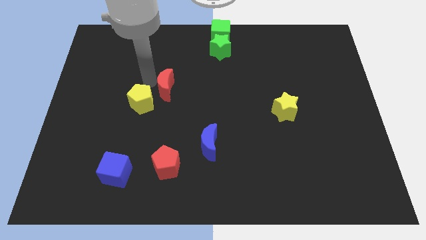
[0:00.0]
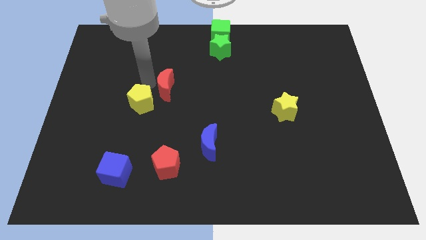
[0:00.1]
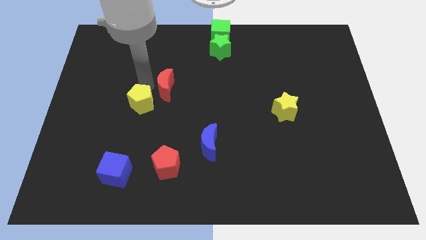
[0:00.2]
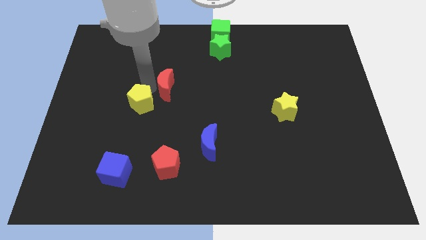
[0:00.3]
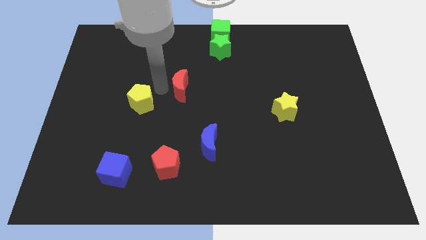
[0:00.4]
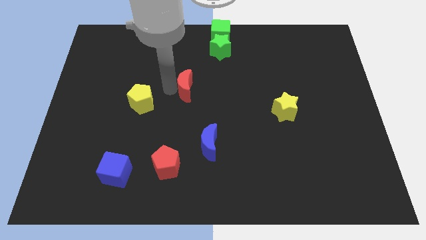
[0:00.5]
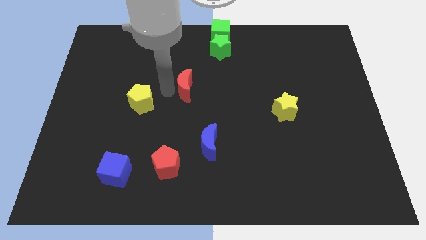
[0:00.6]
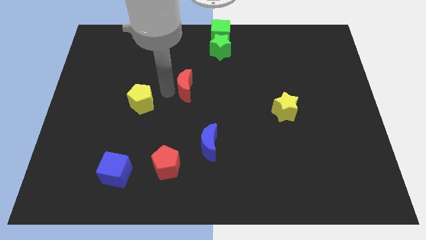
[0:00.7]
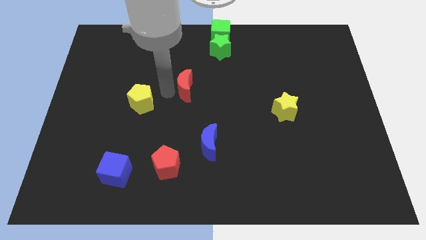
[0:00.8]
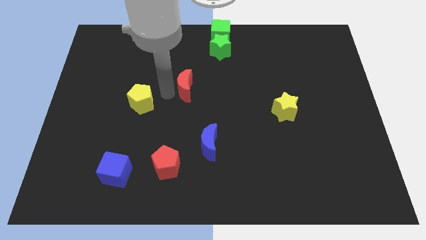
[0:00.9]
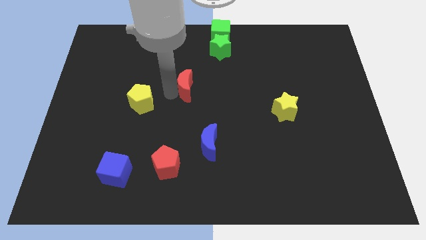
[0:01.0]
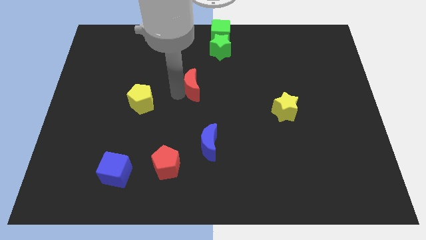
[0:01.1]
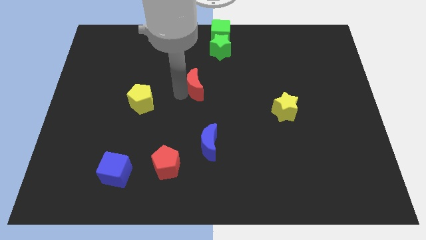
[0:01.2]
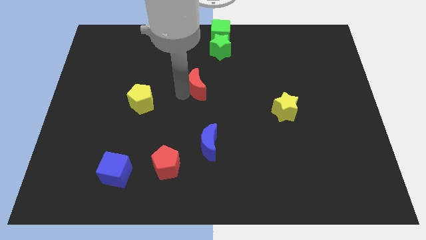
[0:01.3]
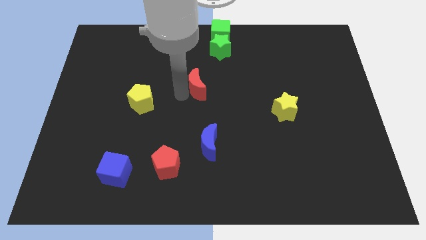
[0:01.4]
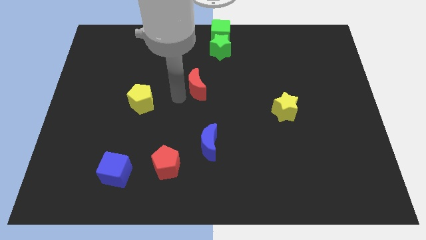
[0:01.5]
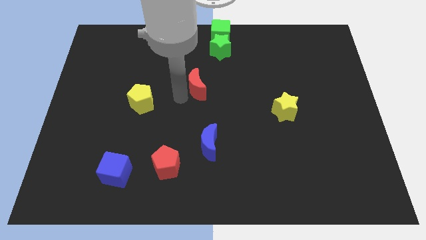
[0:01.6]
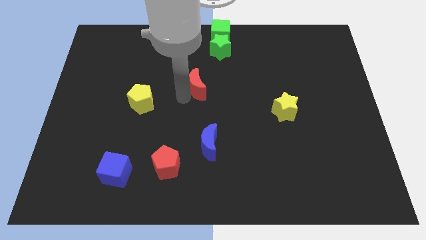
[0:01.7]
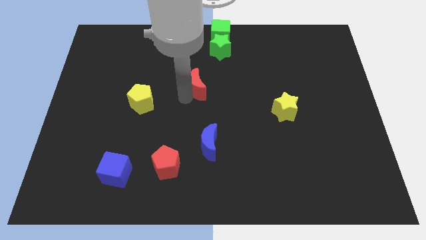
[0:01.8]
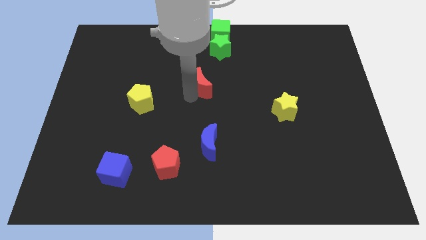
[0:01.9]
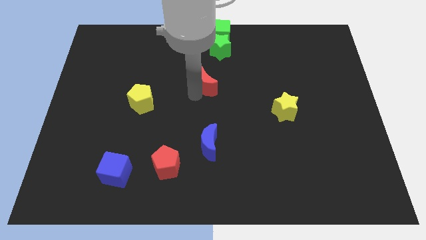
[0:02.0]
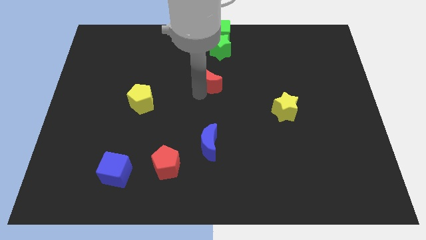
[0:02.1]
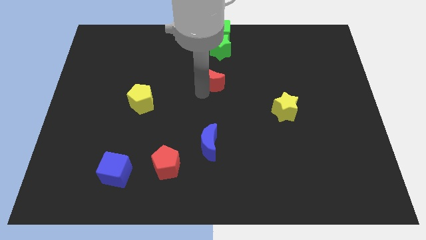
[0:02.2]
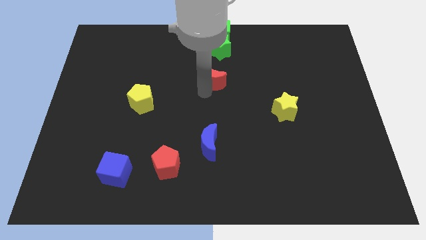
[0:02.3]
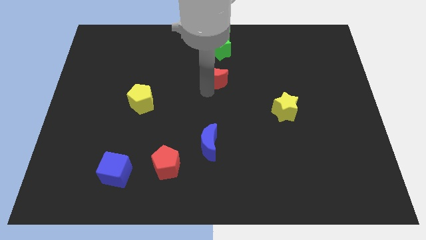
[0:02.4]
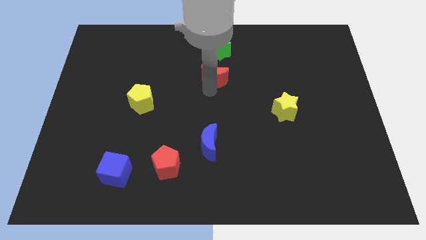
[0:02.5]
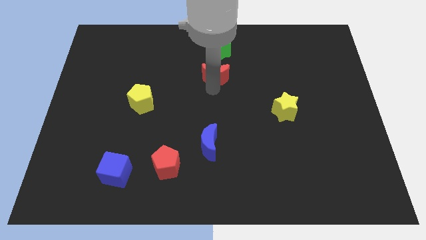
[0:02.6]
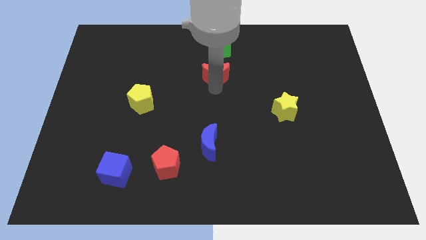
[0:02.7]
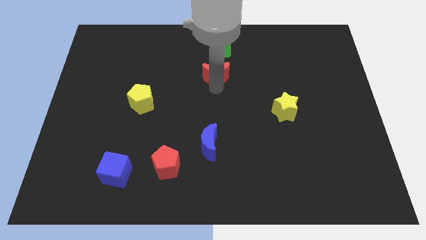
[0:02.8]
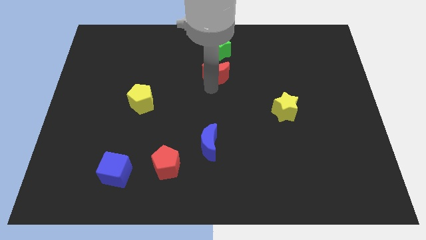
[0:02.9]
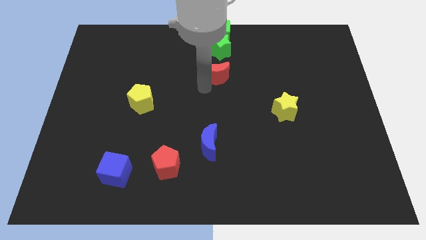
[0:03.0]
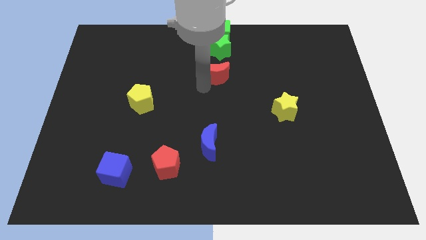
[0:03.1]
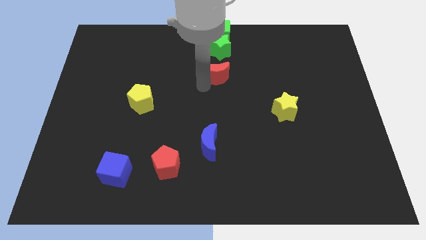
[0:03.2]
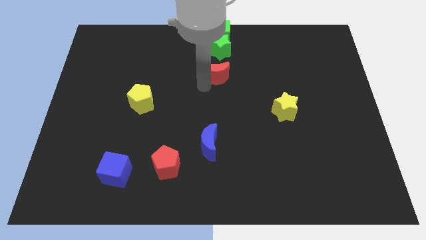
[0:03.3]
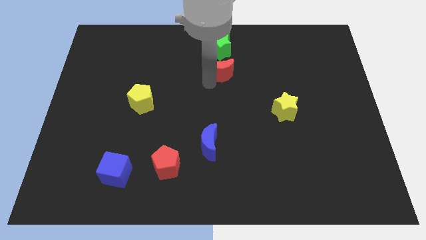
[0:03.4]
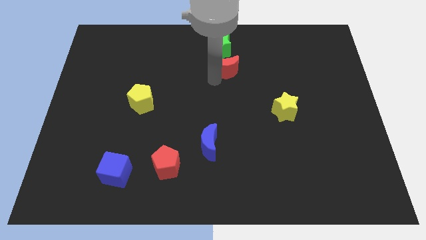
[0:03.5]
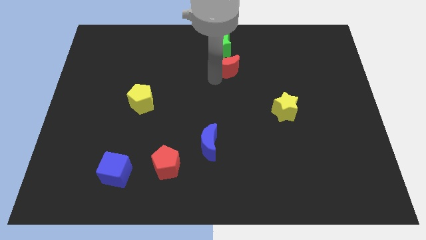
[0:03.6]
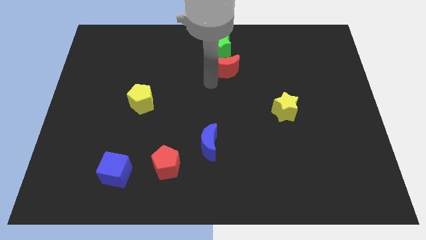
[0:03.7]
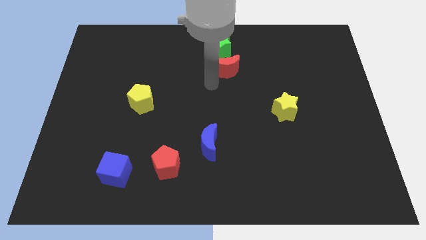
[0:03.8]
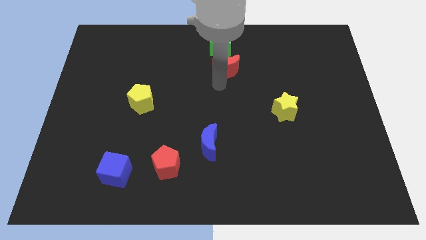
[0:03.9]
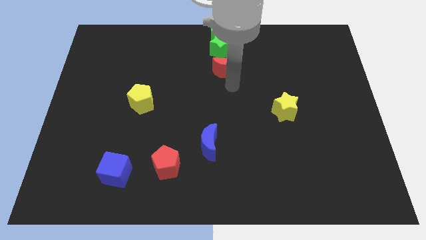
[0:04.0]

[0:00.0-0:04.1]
push the red moon vertically below the green star

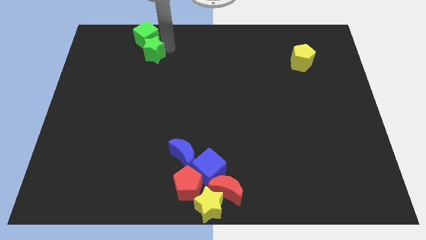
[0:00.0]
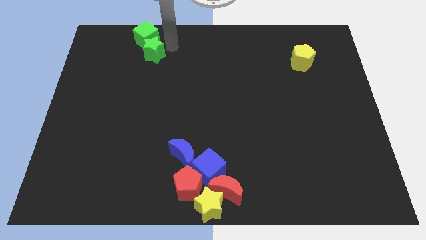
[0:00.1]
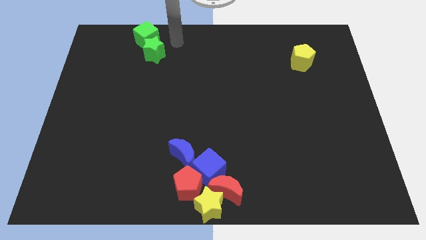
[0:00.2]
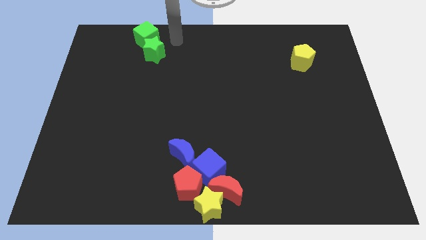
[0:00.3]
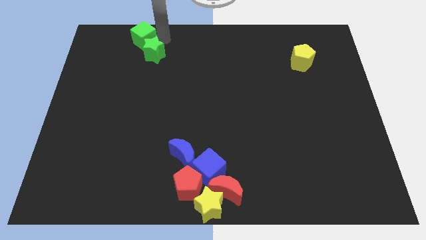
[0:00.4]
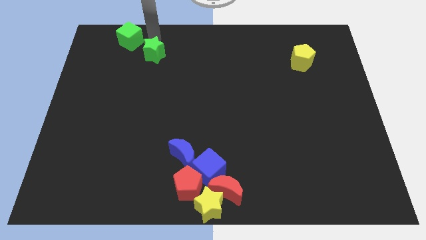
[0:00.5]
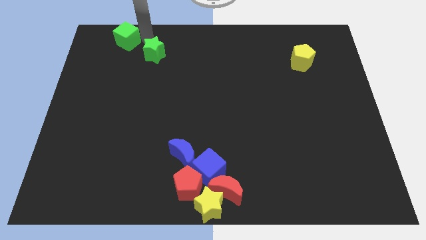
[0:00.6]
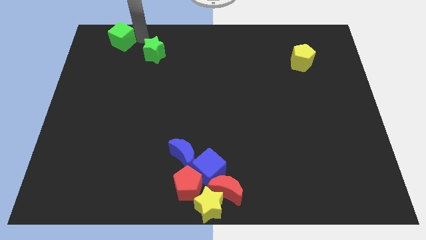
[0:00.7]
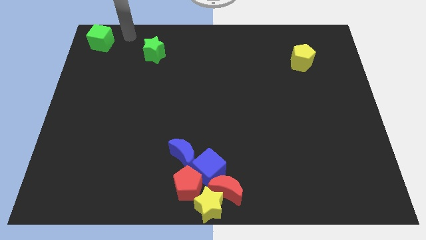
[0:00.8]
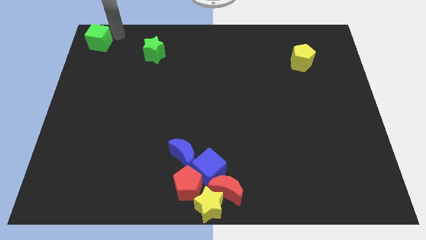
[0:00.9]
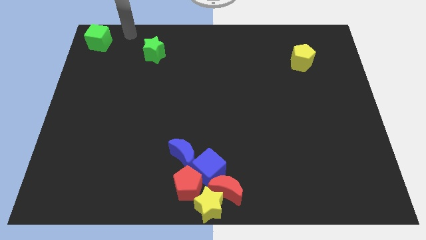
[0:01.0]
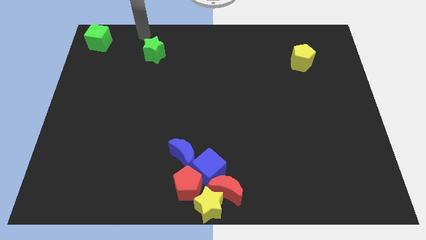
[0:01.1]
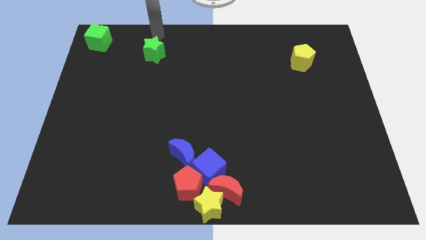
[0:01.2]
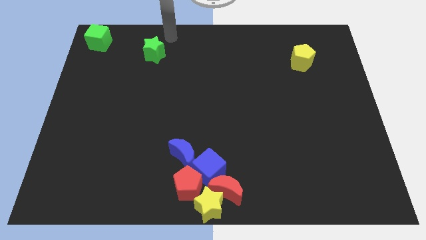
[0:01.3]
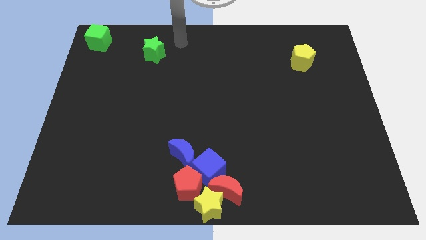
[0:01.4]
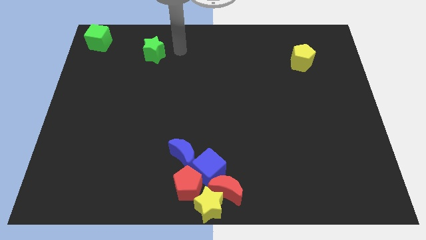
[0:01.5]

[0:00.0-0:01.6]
push the green cube to the top left of the board

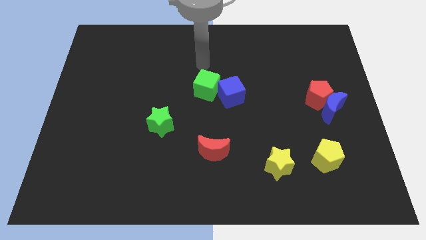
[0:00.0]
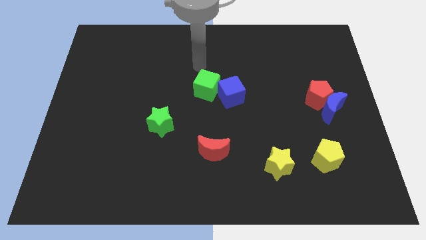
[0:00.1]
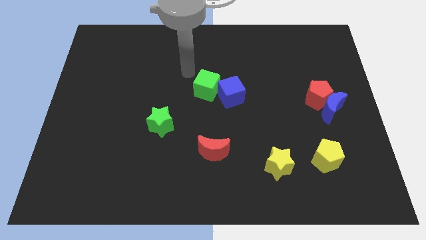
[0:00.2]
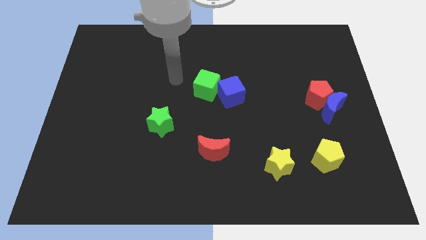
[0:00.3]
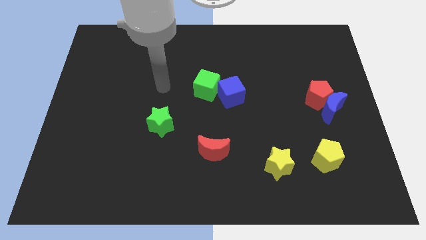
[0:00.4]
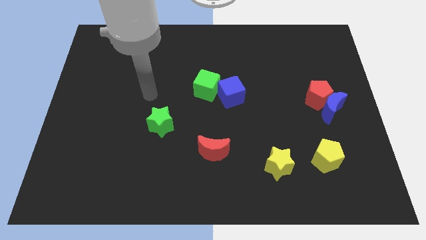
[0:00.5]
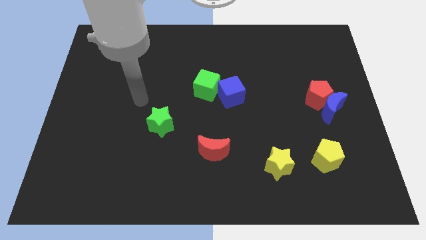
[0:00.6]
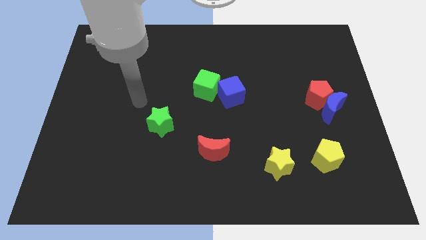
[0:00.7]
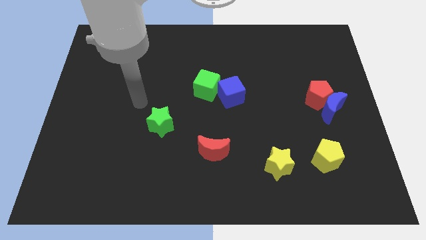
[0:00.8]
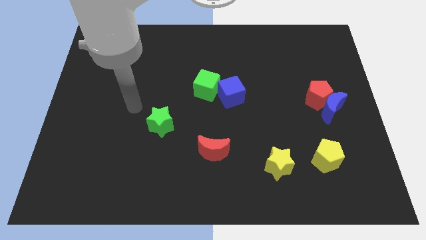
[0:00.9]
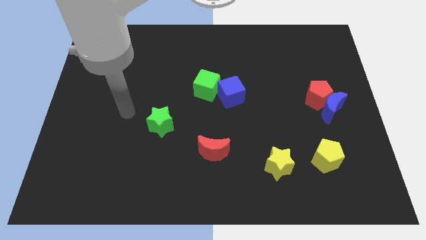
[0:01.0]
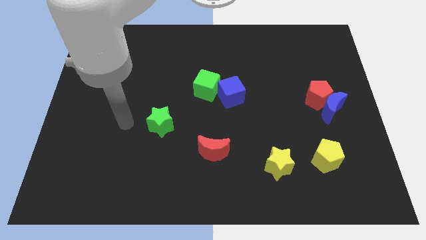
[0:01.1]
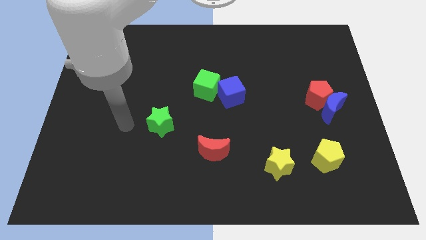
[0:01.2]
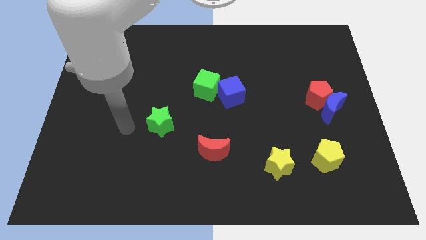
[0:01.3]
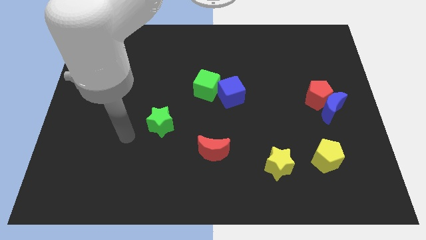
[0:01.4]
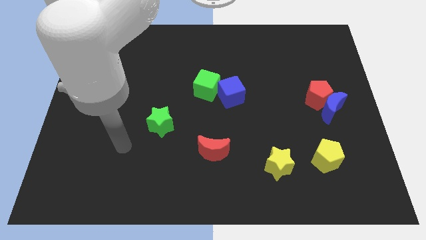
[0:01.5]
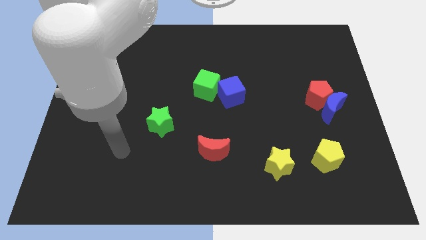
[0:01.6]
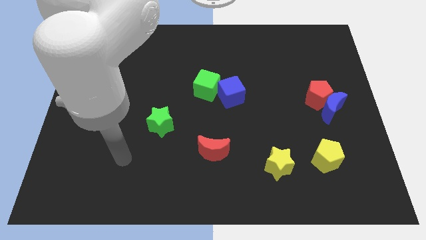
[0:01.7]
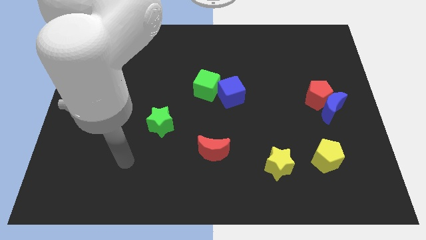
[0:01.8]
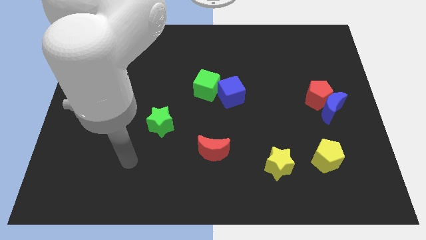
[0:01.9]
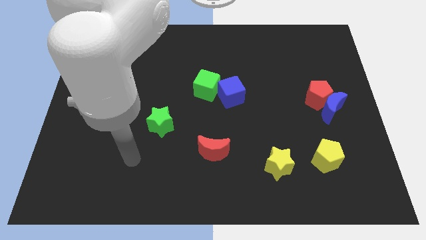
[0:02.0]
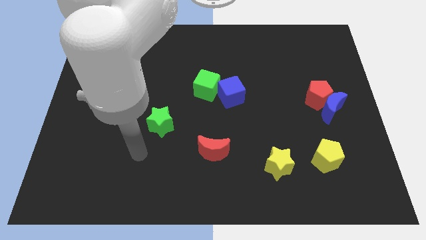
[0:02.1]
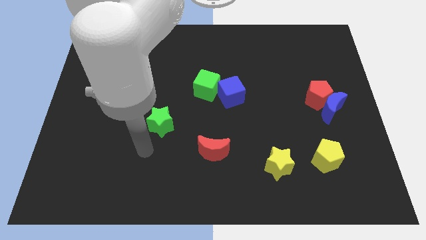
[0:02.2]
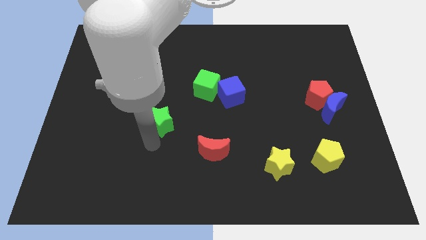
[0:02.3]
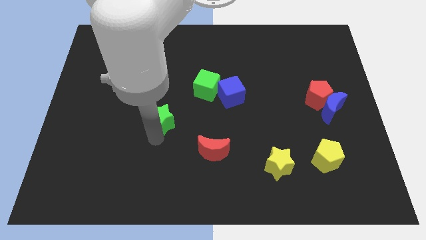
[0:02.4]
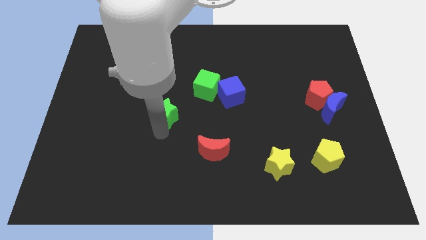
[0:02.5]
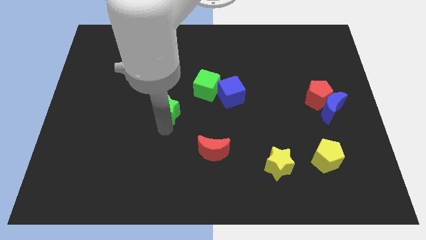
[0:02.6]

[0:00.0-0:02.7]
push the green star to the top of the board

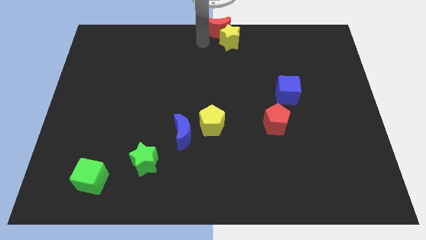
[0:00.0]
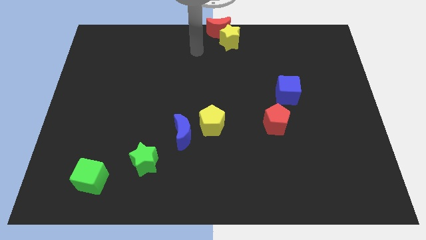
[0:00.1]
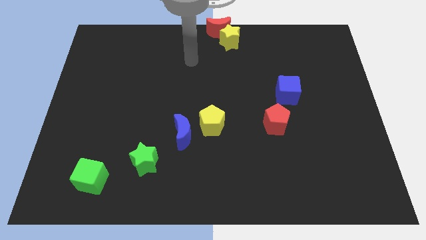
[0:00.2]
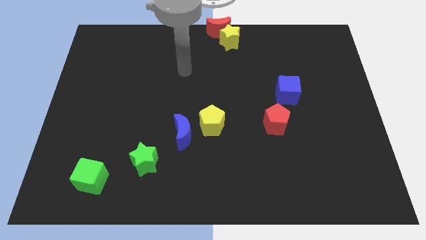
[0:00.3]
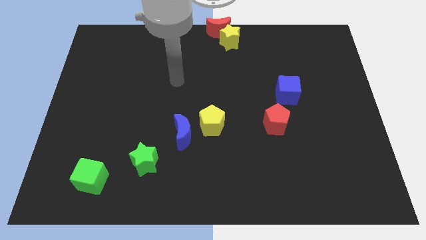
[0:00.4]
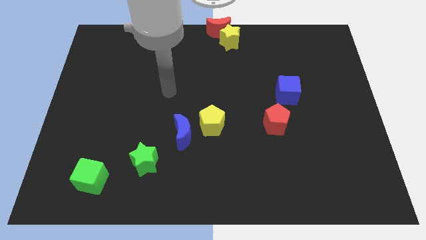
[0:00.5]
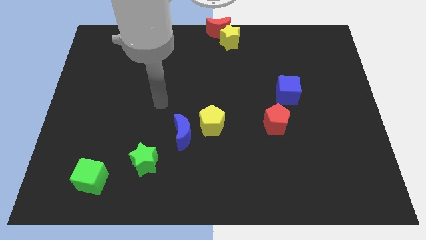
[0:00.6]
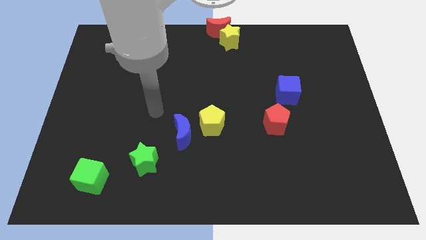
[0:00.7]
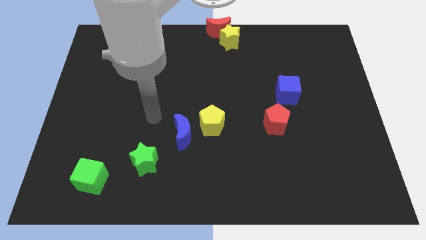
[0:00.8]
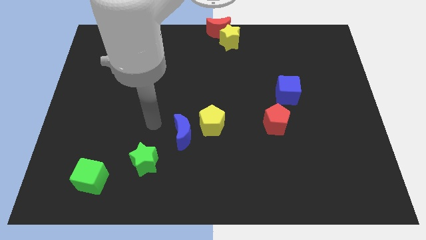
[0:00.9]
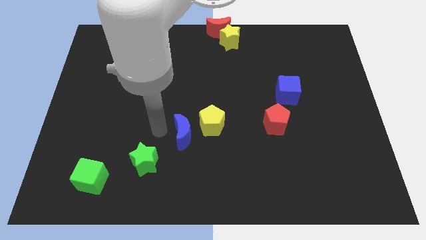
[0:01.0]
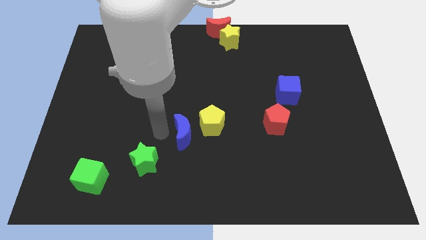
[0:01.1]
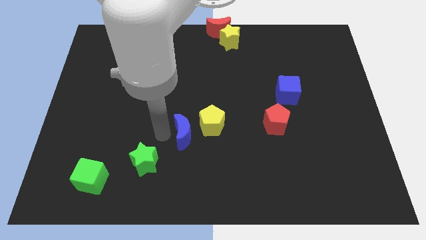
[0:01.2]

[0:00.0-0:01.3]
place your hand parallel left to the blue moon
